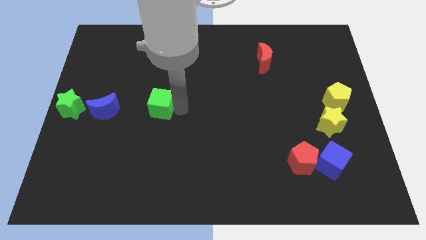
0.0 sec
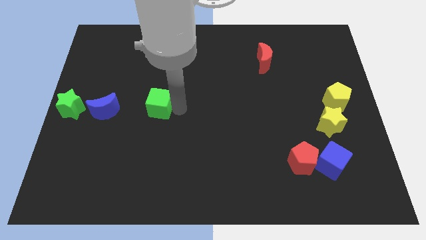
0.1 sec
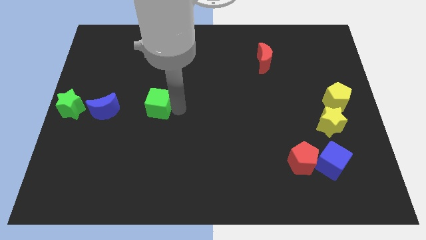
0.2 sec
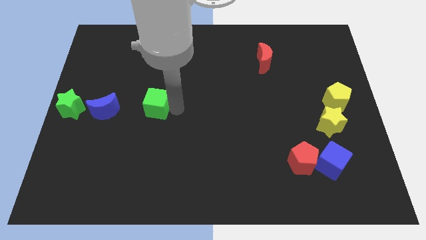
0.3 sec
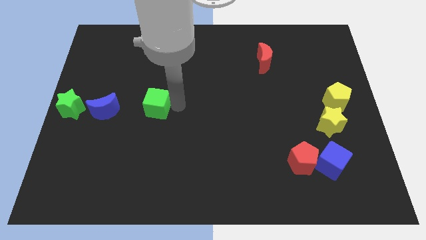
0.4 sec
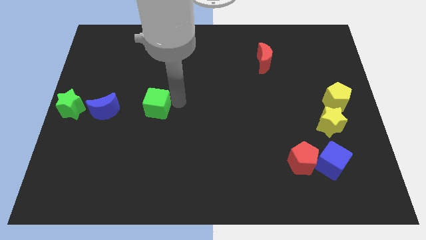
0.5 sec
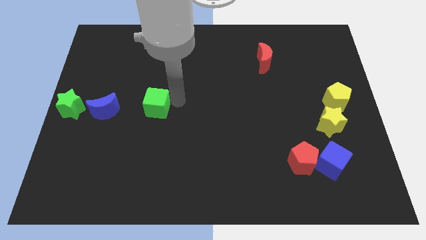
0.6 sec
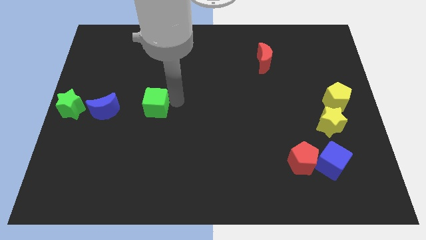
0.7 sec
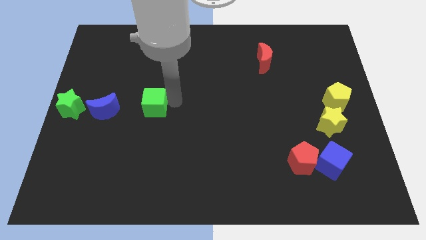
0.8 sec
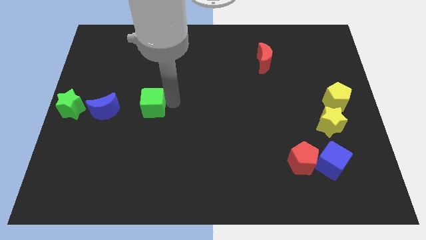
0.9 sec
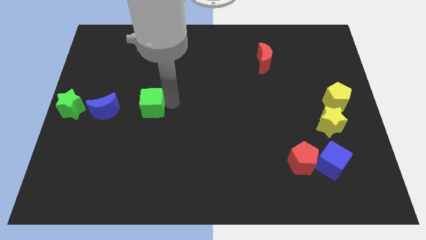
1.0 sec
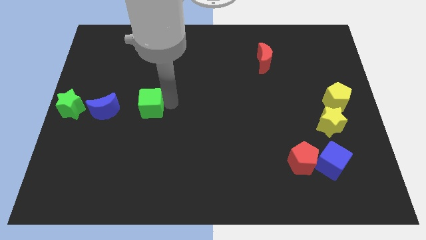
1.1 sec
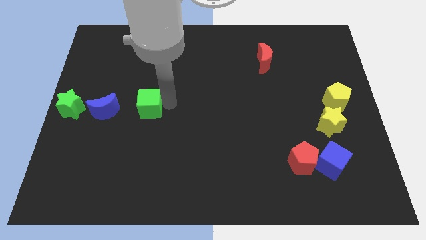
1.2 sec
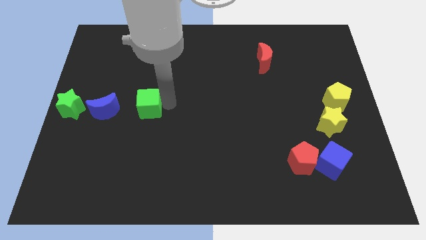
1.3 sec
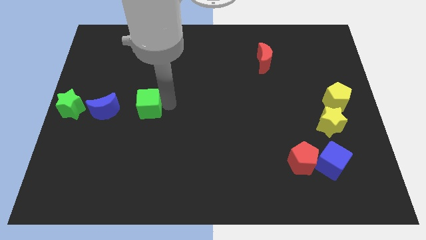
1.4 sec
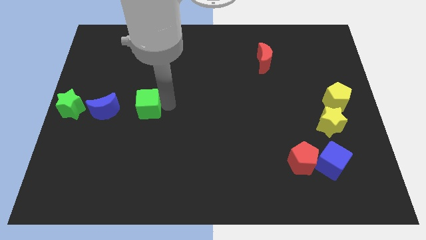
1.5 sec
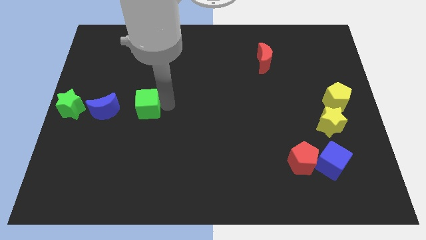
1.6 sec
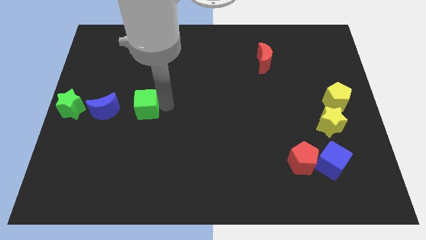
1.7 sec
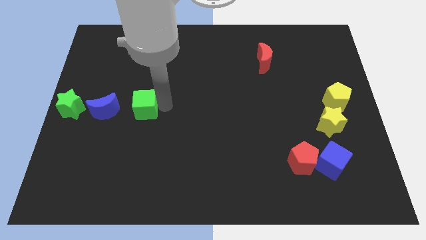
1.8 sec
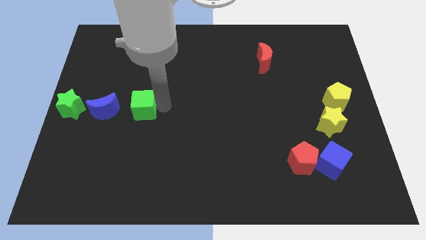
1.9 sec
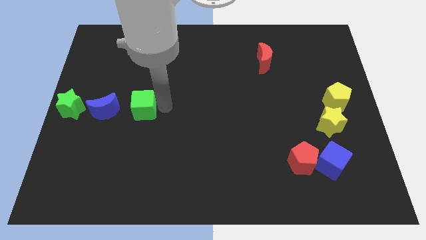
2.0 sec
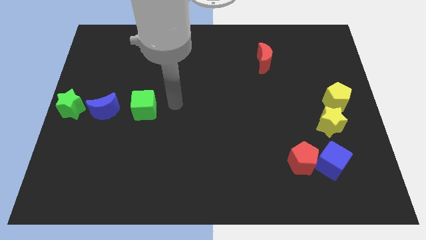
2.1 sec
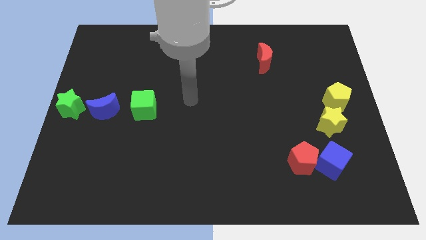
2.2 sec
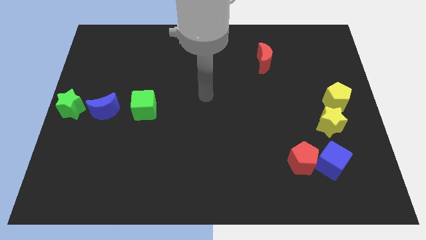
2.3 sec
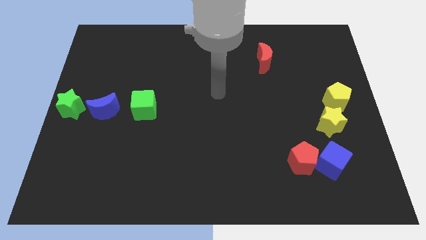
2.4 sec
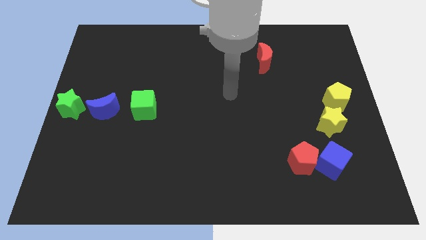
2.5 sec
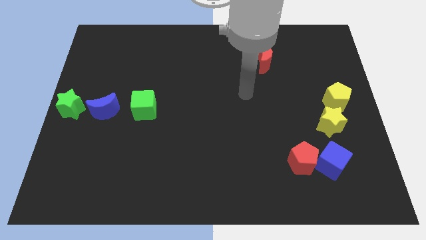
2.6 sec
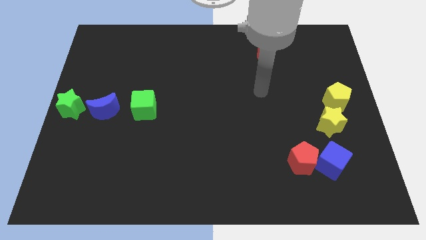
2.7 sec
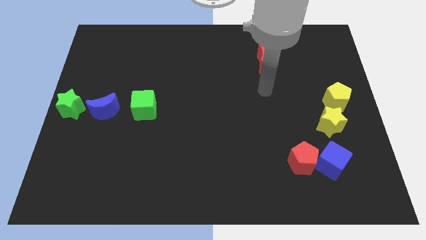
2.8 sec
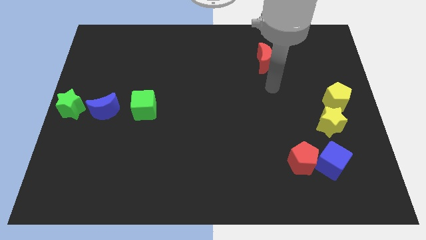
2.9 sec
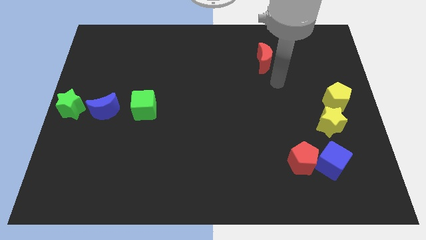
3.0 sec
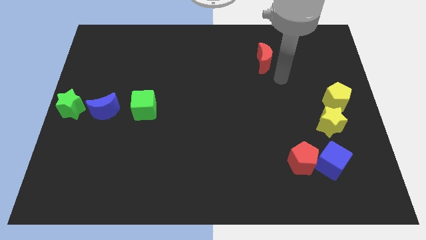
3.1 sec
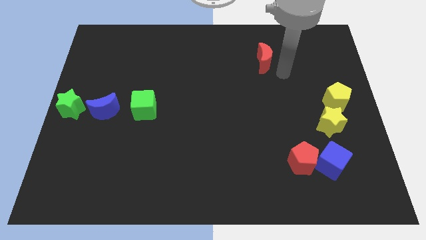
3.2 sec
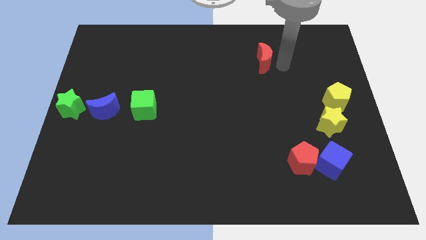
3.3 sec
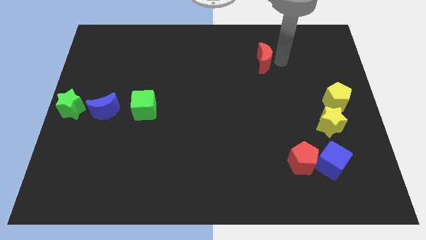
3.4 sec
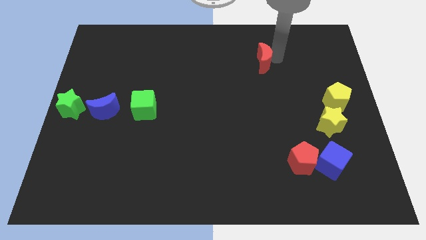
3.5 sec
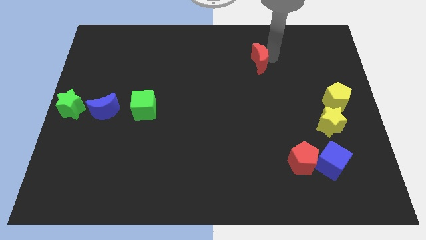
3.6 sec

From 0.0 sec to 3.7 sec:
place the arm to the right of the red moon

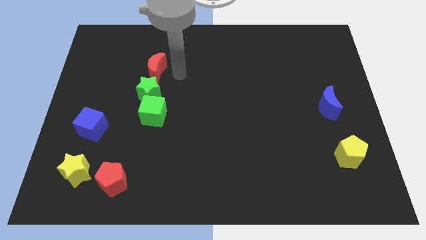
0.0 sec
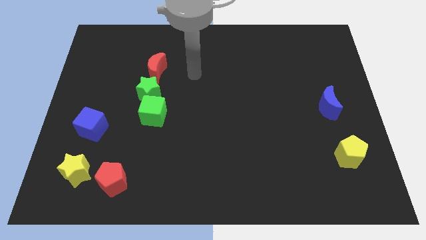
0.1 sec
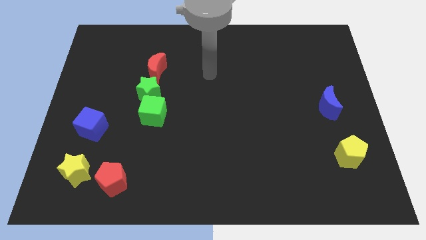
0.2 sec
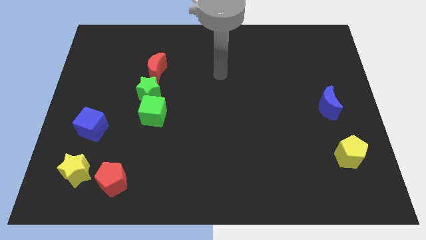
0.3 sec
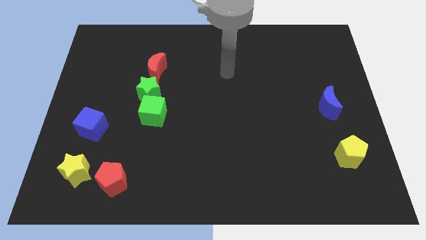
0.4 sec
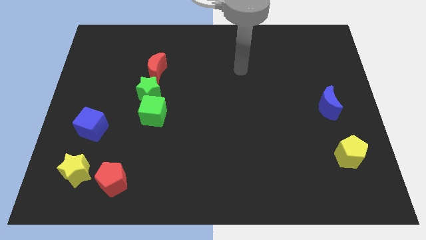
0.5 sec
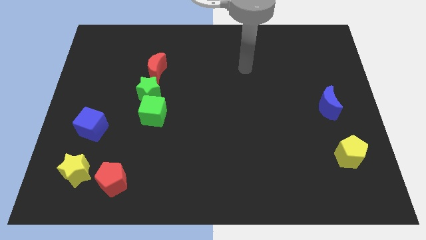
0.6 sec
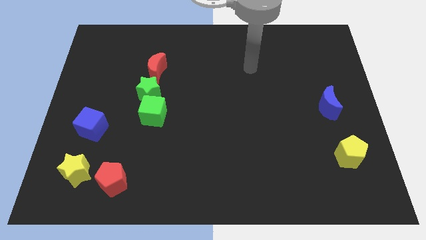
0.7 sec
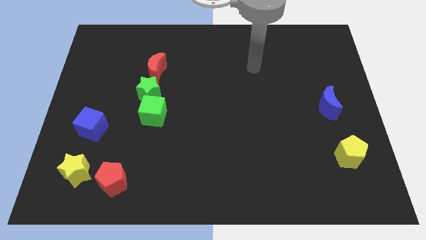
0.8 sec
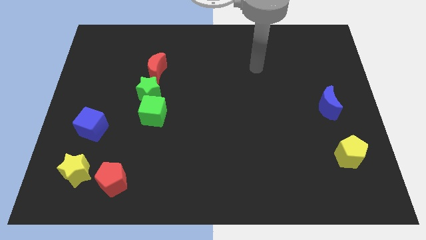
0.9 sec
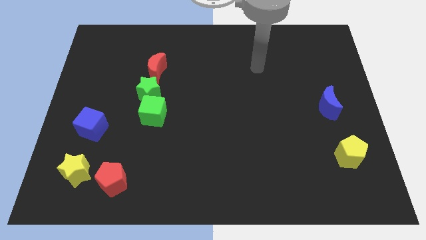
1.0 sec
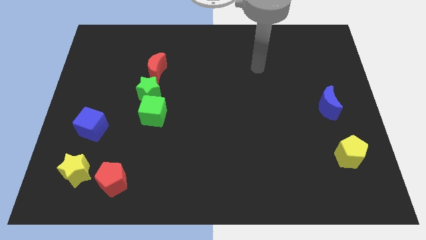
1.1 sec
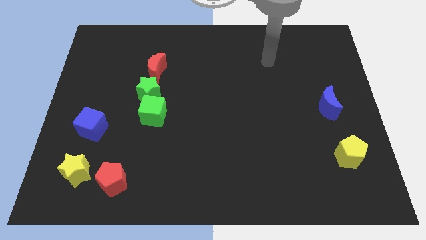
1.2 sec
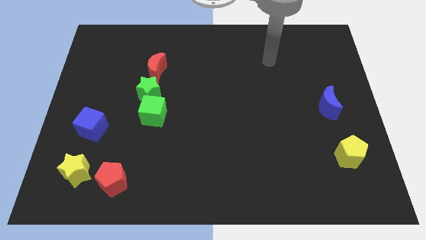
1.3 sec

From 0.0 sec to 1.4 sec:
move your arm away from the red moon

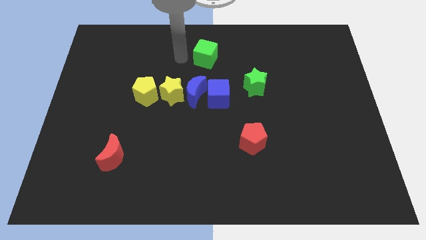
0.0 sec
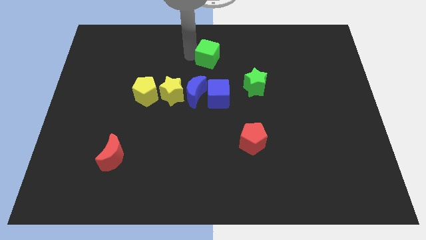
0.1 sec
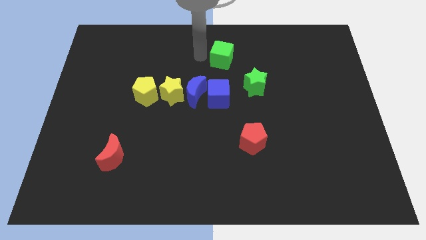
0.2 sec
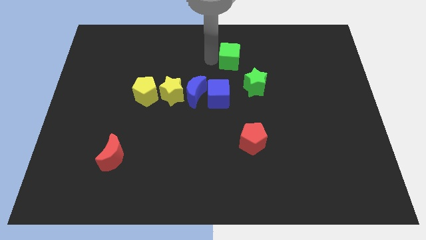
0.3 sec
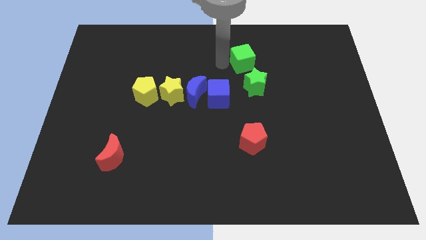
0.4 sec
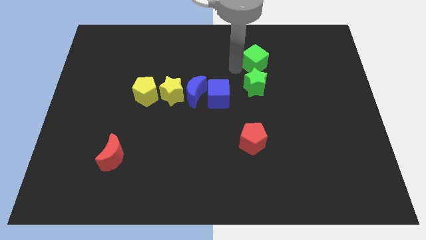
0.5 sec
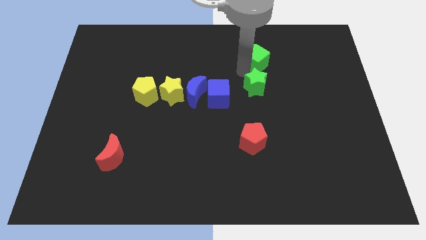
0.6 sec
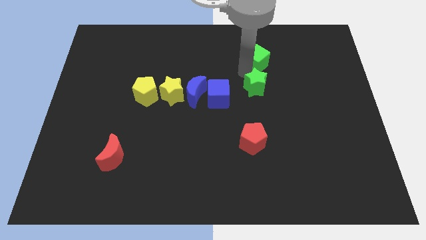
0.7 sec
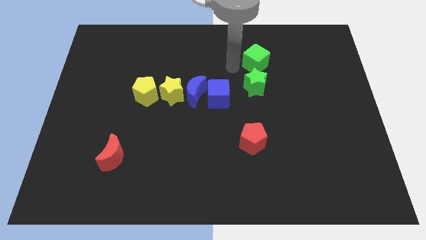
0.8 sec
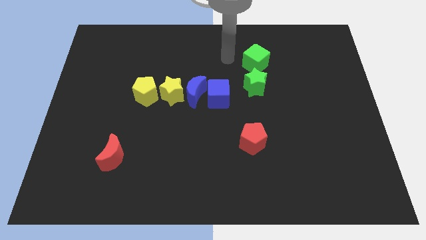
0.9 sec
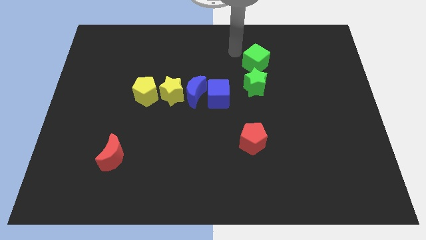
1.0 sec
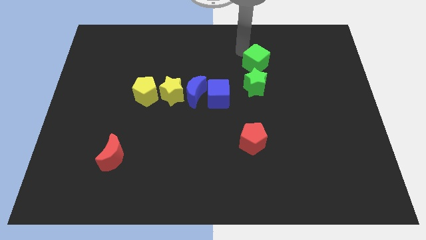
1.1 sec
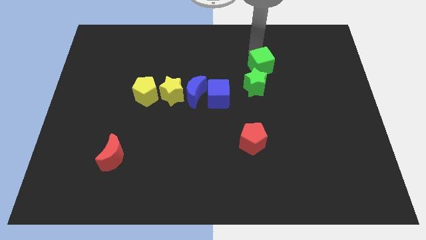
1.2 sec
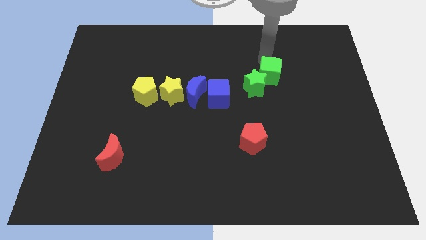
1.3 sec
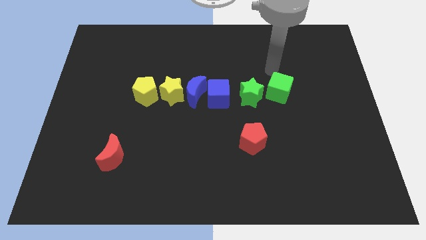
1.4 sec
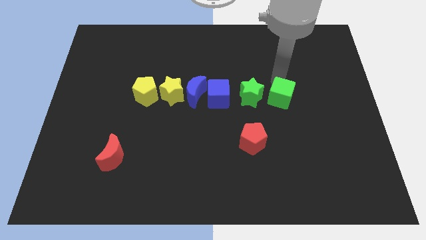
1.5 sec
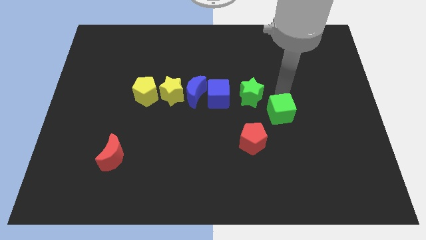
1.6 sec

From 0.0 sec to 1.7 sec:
arrange all the blocks in a horizontal line except the red blocks

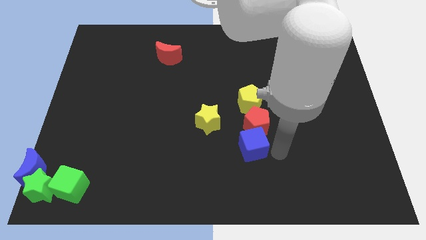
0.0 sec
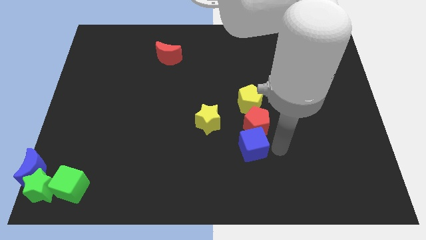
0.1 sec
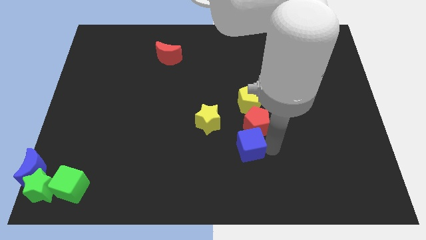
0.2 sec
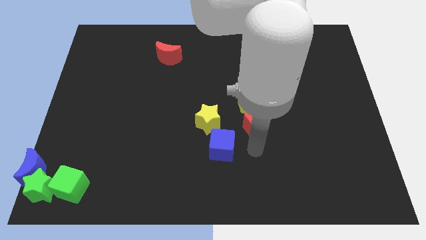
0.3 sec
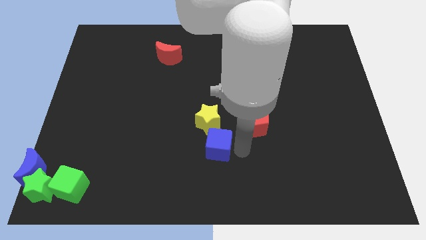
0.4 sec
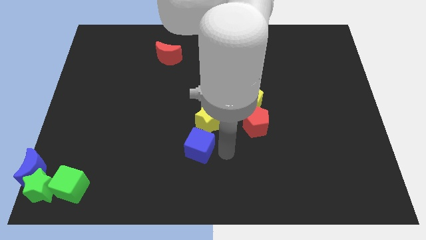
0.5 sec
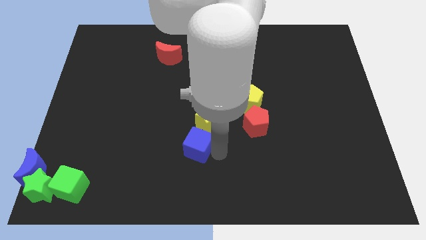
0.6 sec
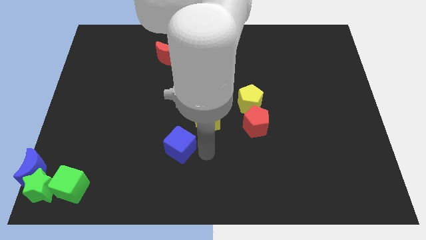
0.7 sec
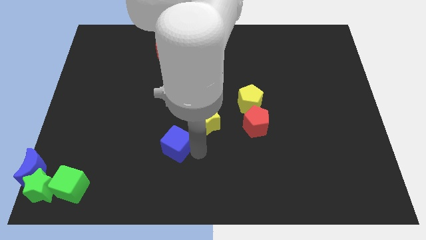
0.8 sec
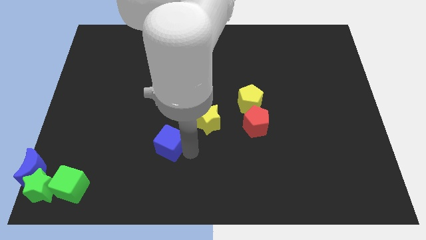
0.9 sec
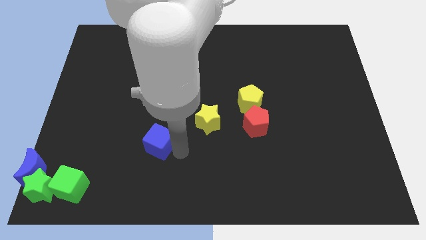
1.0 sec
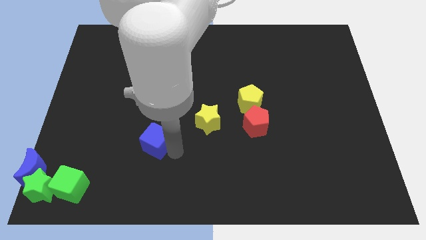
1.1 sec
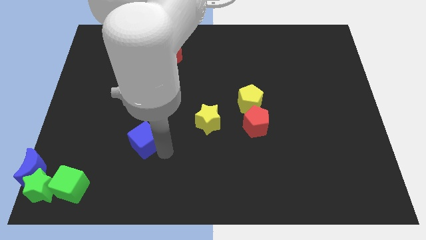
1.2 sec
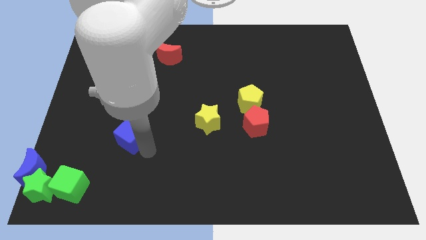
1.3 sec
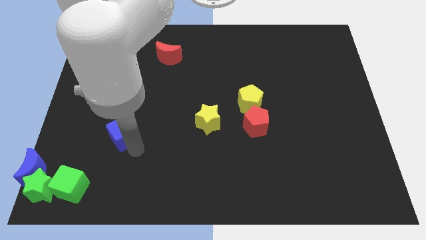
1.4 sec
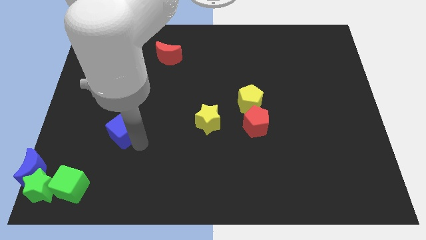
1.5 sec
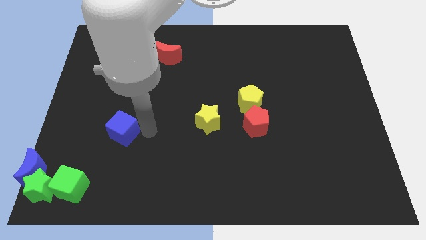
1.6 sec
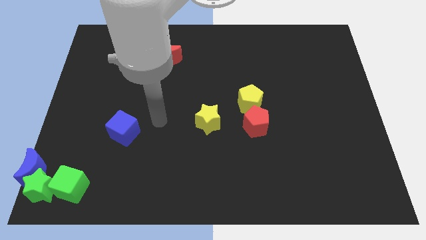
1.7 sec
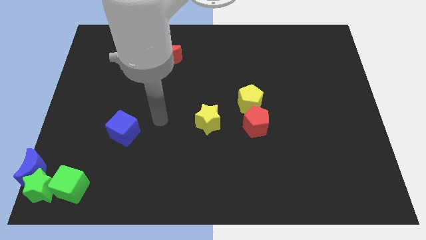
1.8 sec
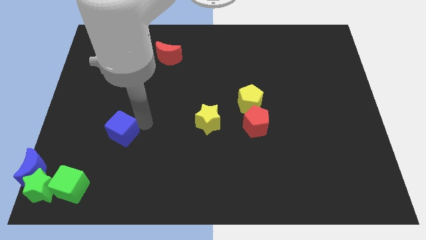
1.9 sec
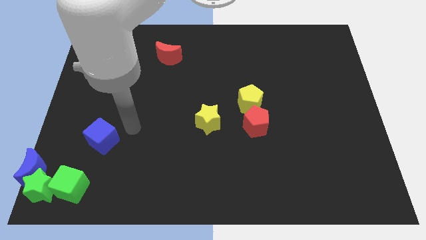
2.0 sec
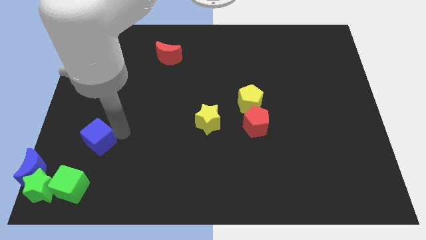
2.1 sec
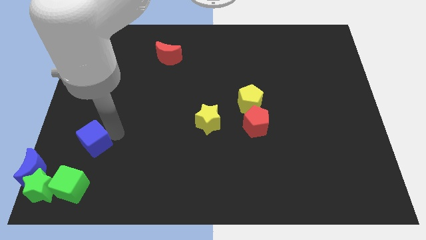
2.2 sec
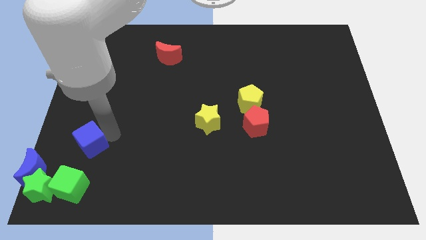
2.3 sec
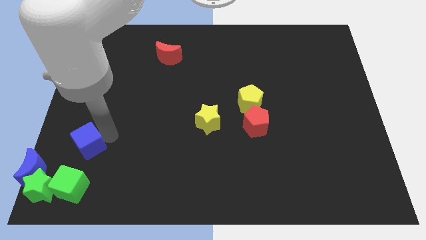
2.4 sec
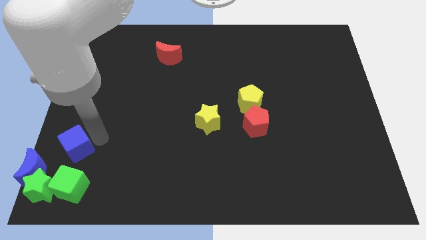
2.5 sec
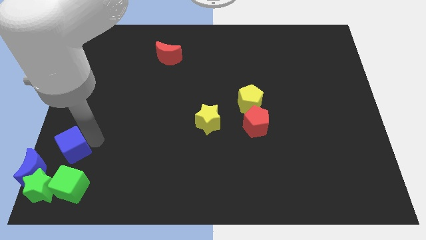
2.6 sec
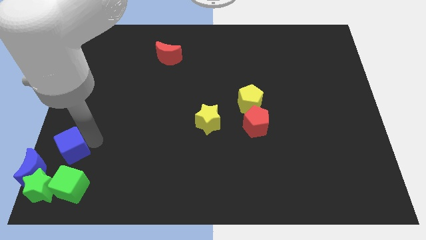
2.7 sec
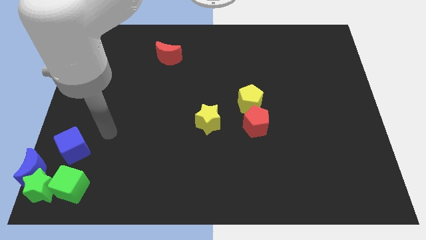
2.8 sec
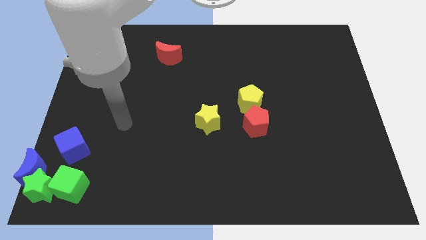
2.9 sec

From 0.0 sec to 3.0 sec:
move the blue cube to the top side of the green cube
